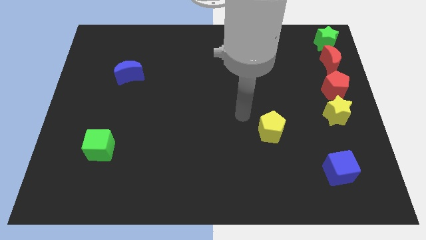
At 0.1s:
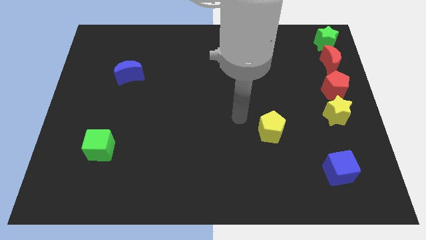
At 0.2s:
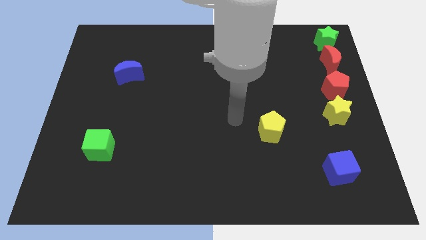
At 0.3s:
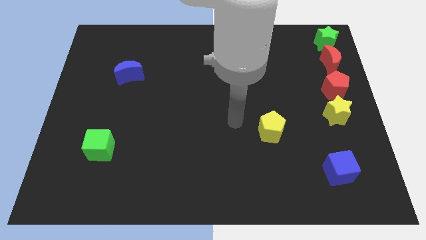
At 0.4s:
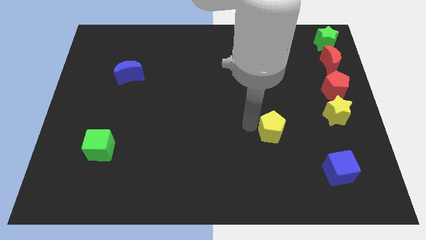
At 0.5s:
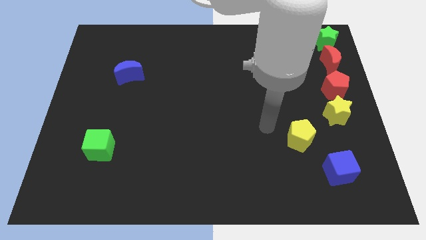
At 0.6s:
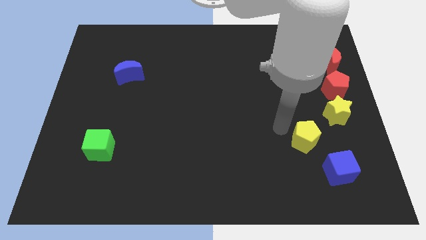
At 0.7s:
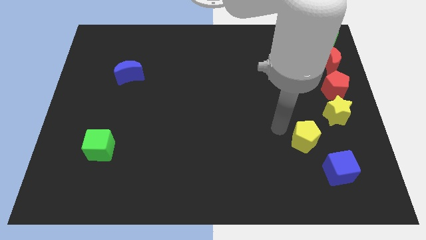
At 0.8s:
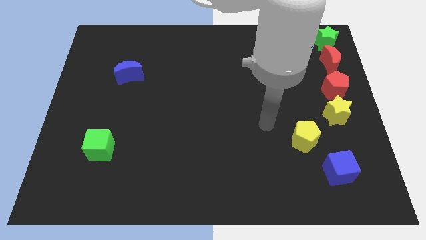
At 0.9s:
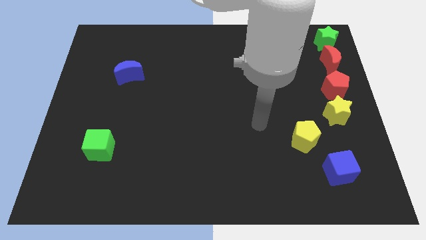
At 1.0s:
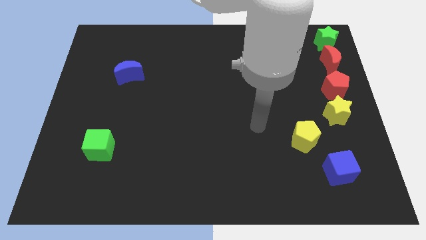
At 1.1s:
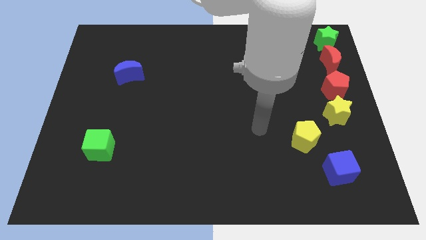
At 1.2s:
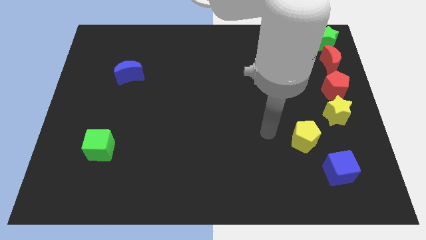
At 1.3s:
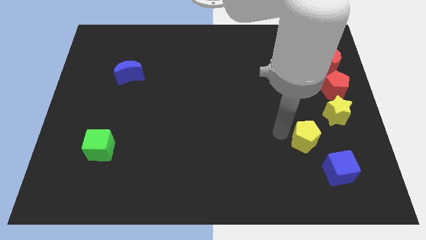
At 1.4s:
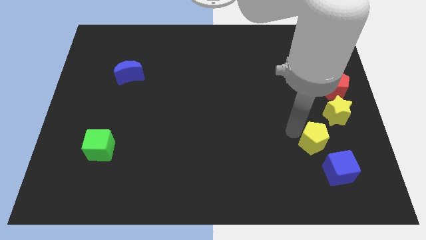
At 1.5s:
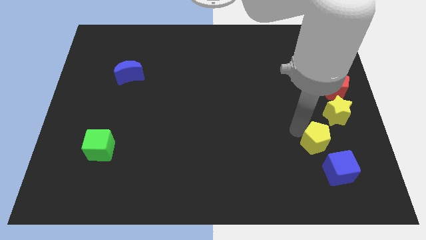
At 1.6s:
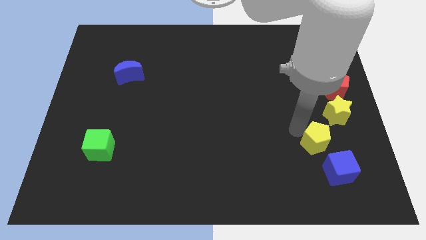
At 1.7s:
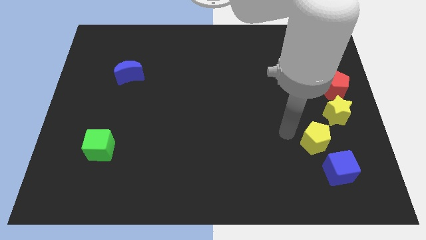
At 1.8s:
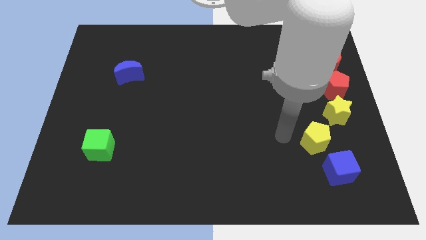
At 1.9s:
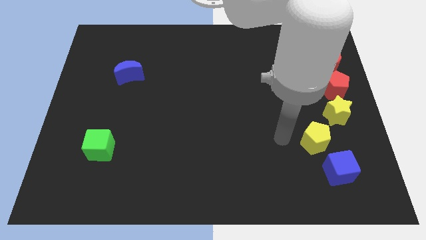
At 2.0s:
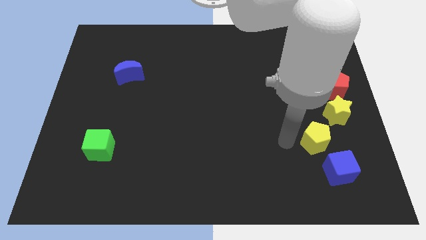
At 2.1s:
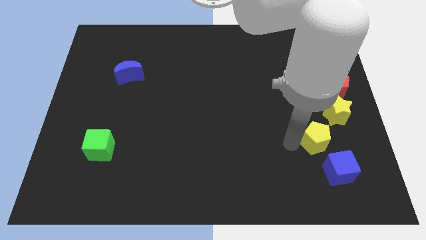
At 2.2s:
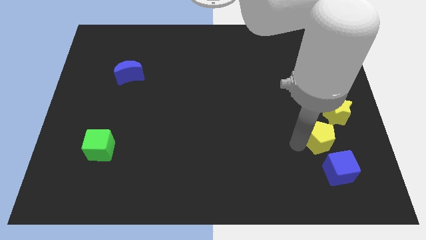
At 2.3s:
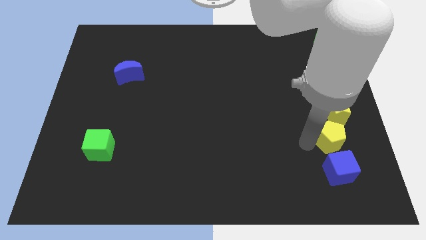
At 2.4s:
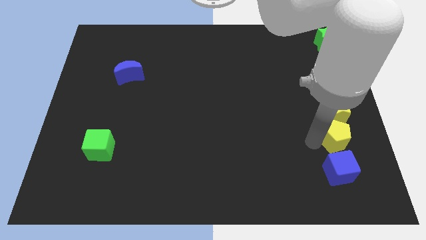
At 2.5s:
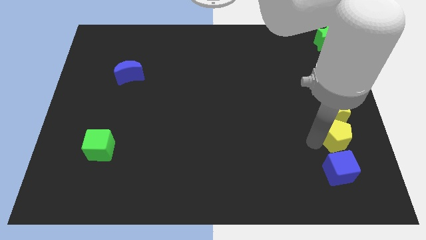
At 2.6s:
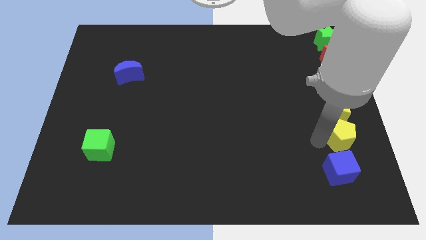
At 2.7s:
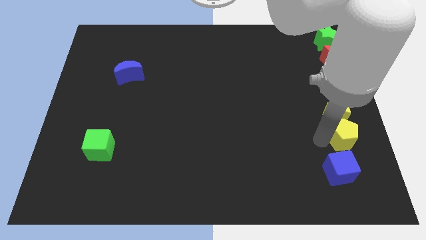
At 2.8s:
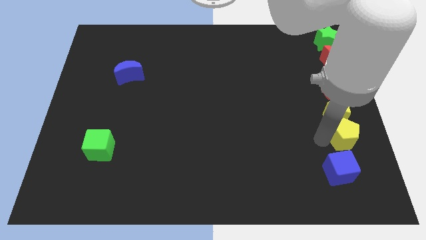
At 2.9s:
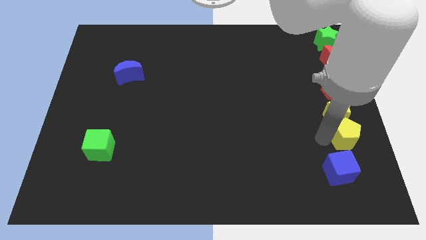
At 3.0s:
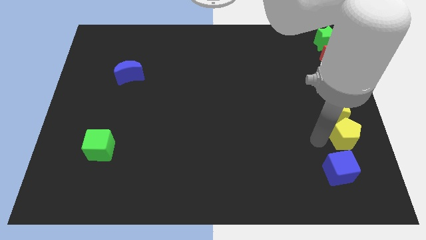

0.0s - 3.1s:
put the yellow pentagon at the bottom side of the yellow star

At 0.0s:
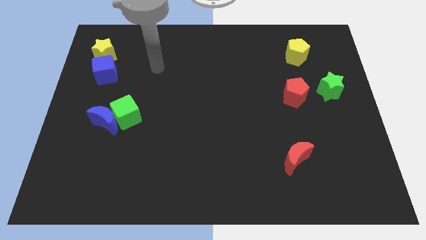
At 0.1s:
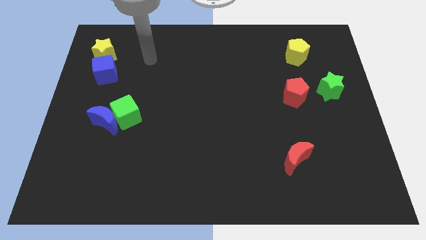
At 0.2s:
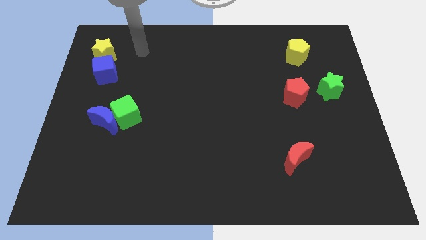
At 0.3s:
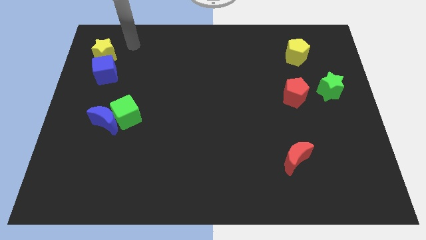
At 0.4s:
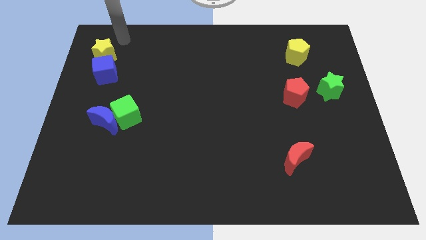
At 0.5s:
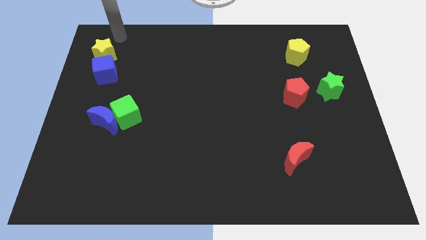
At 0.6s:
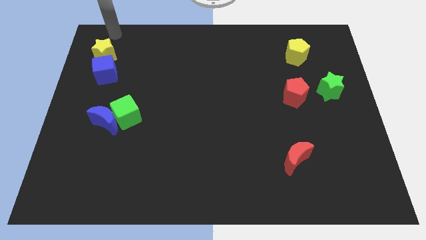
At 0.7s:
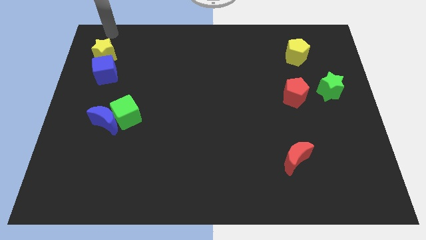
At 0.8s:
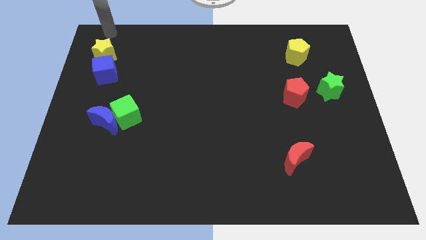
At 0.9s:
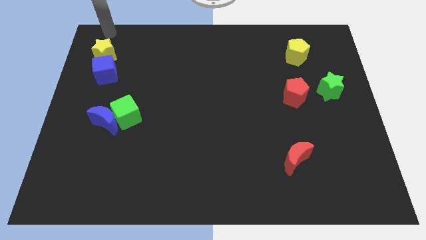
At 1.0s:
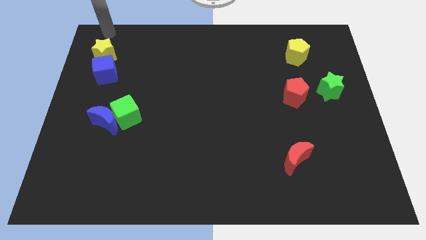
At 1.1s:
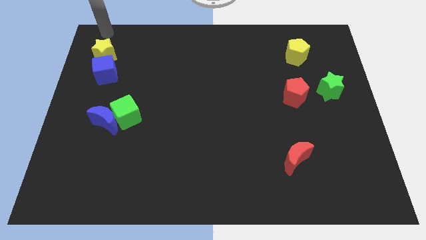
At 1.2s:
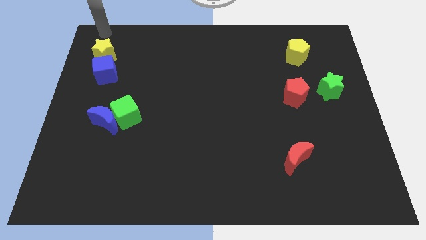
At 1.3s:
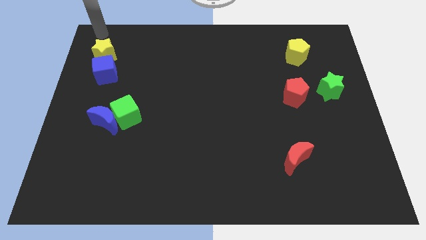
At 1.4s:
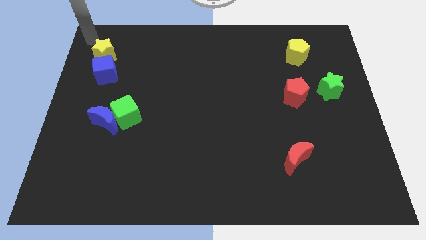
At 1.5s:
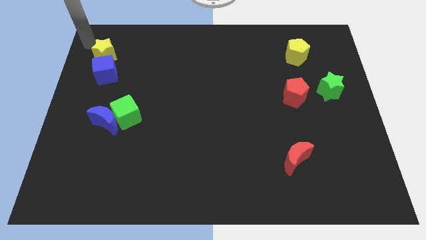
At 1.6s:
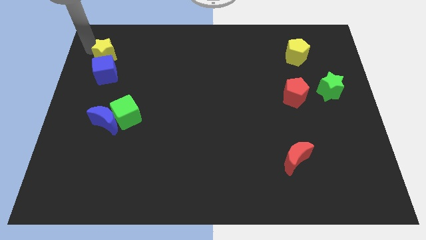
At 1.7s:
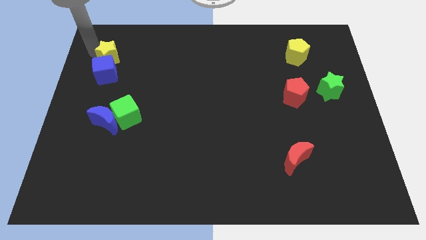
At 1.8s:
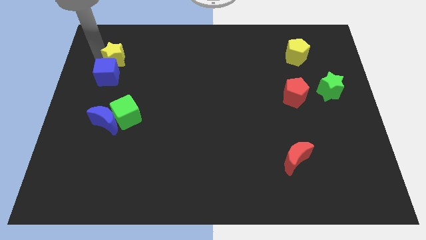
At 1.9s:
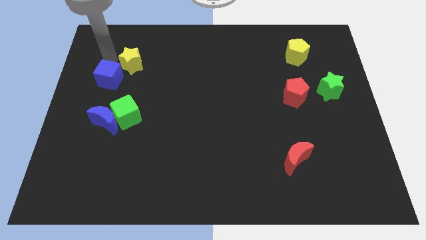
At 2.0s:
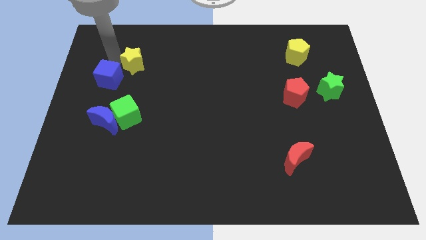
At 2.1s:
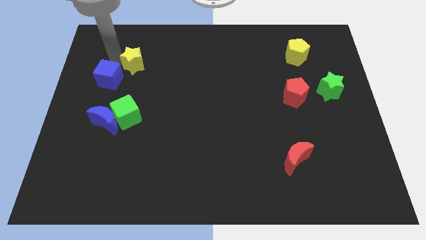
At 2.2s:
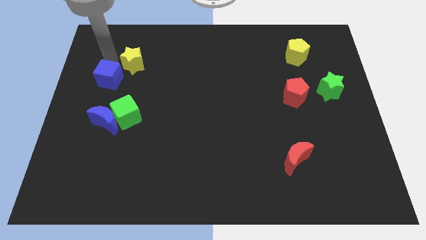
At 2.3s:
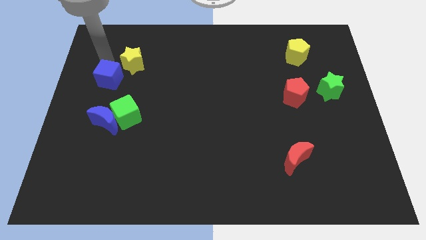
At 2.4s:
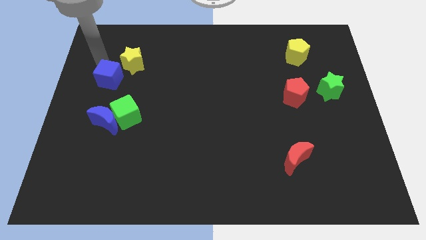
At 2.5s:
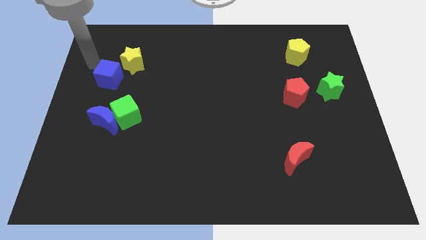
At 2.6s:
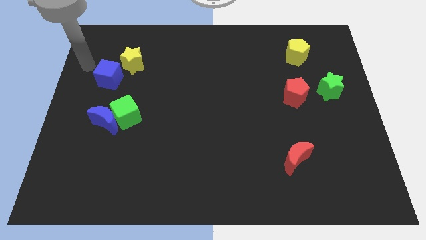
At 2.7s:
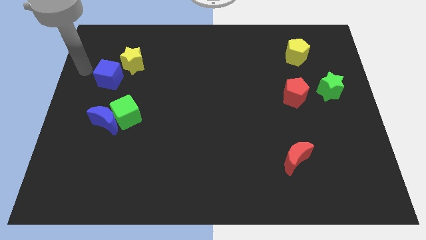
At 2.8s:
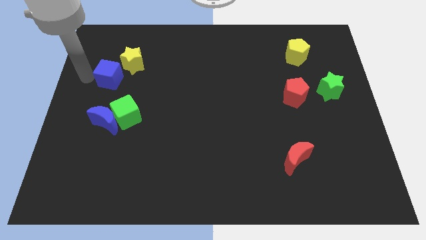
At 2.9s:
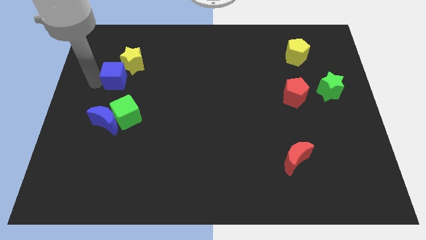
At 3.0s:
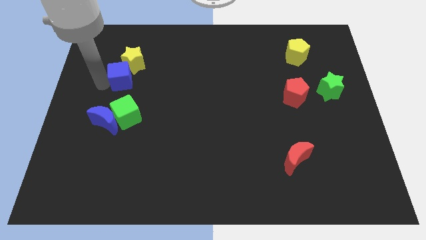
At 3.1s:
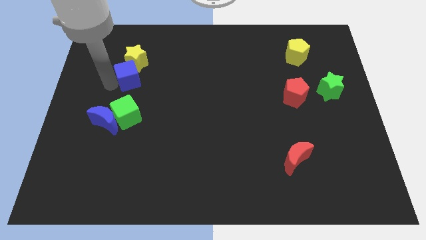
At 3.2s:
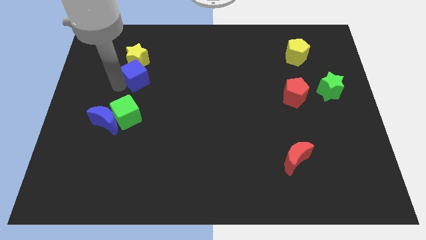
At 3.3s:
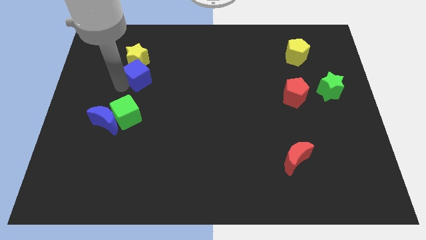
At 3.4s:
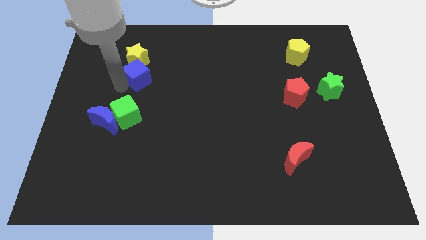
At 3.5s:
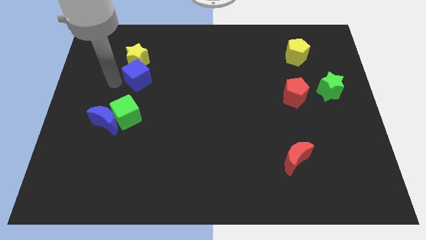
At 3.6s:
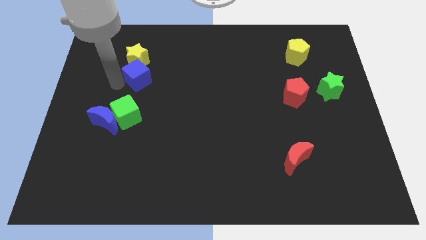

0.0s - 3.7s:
push the yellow star into the blue cube

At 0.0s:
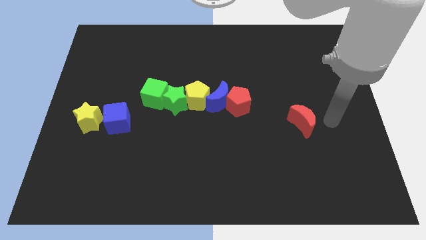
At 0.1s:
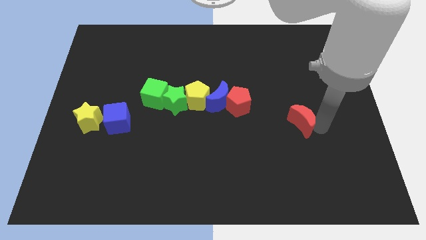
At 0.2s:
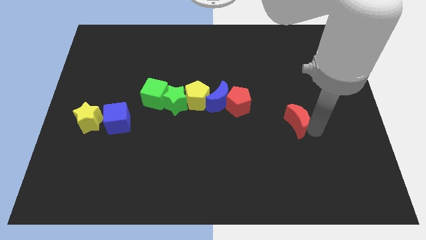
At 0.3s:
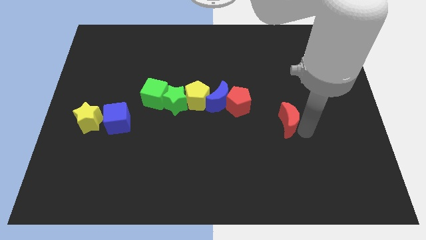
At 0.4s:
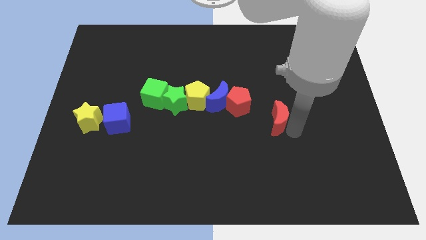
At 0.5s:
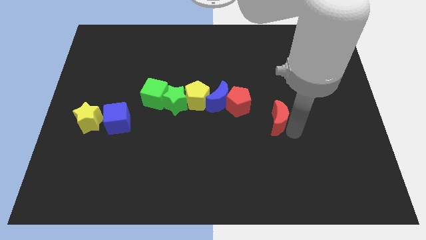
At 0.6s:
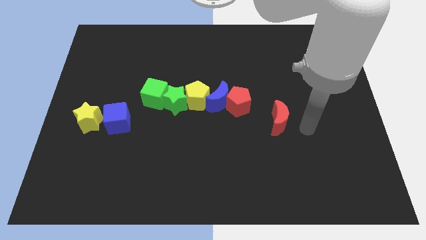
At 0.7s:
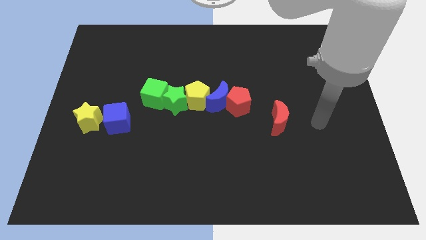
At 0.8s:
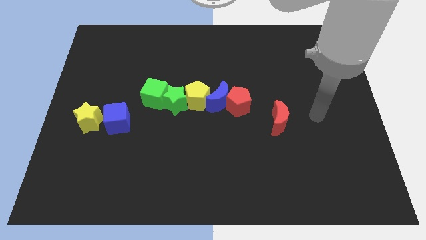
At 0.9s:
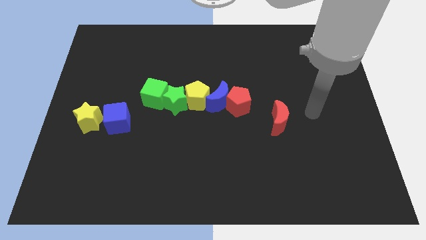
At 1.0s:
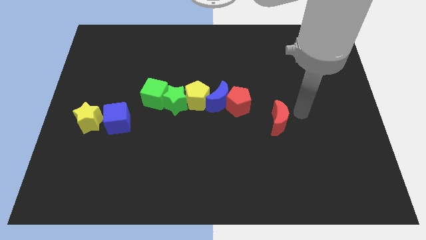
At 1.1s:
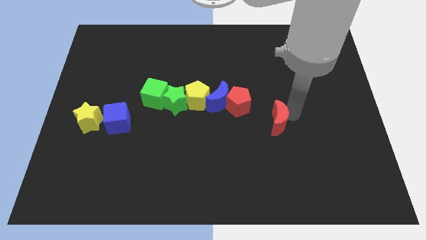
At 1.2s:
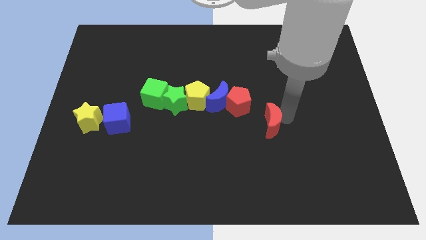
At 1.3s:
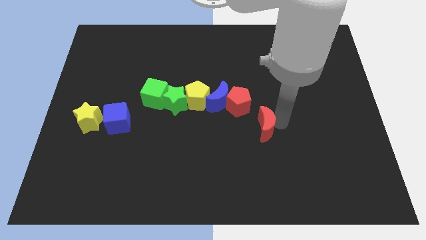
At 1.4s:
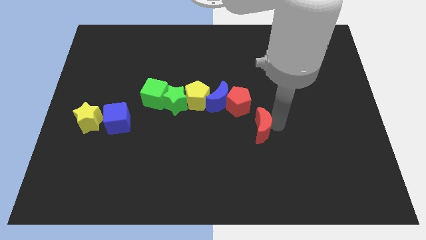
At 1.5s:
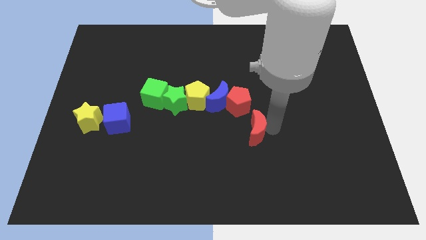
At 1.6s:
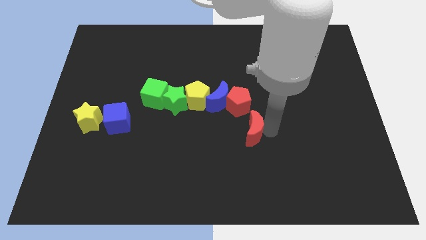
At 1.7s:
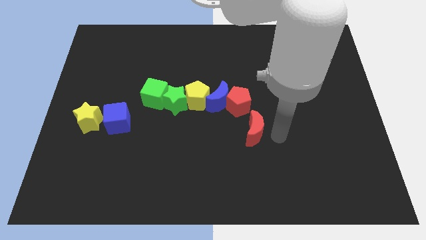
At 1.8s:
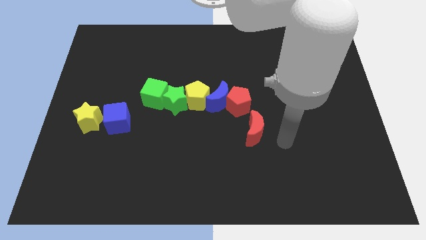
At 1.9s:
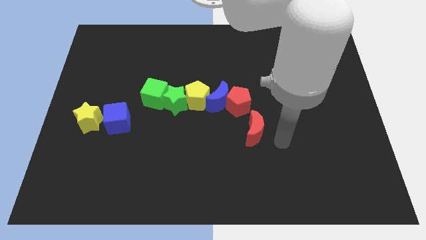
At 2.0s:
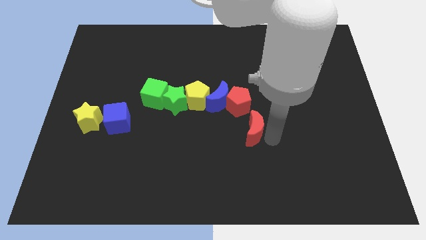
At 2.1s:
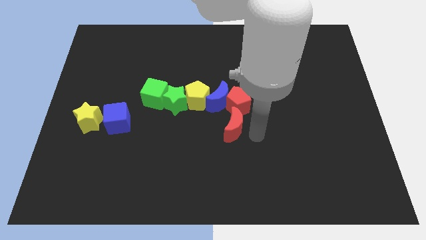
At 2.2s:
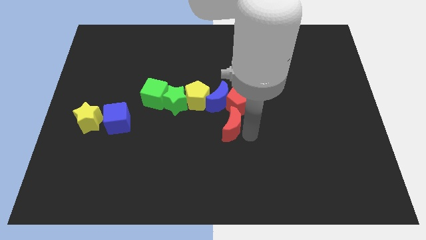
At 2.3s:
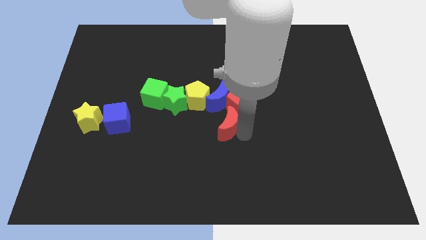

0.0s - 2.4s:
push red crescent below red pentagon
